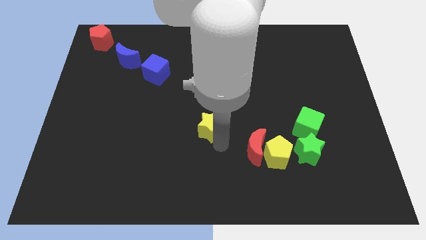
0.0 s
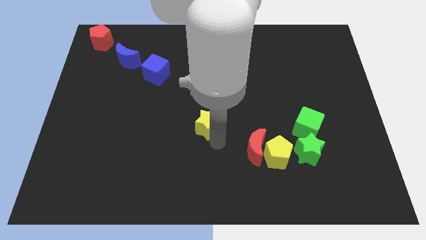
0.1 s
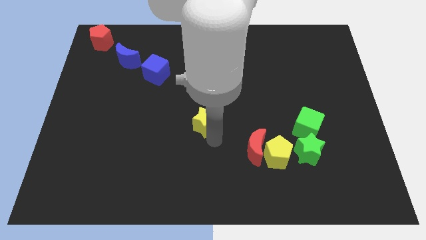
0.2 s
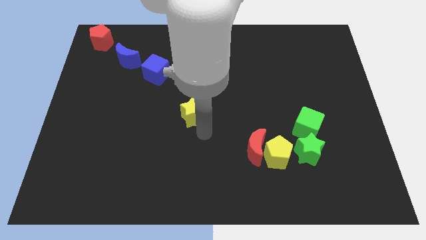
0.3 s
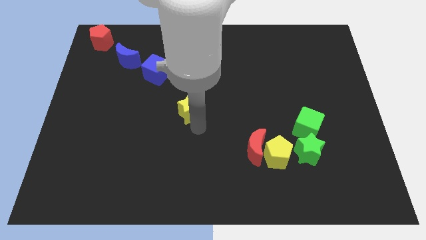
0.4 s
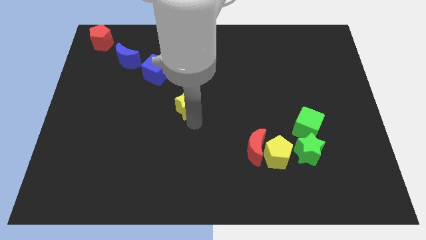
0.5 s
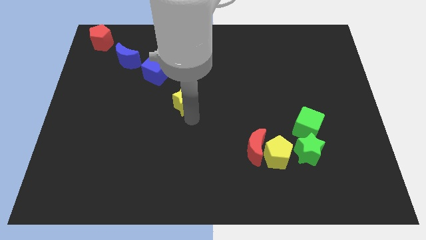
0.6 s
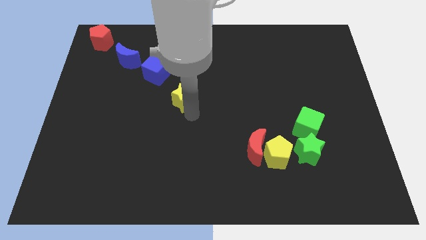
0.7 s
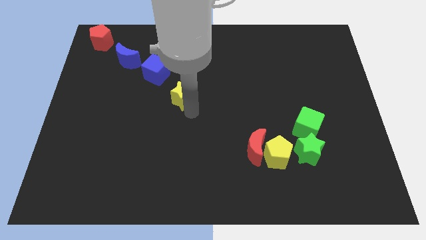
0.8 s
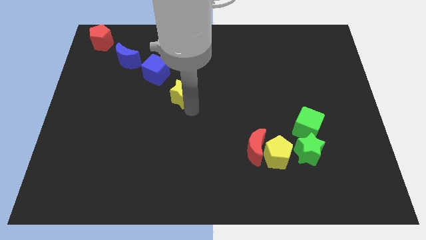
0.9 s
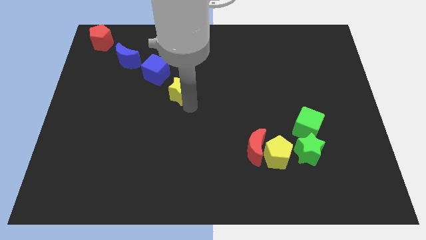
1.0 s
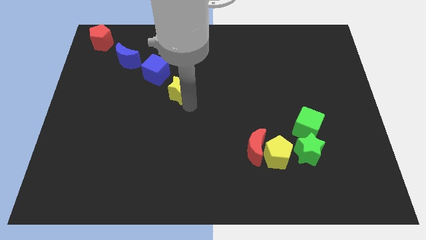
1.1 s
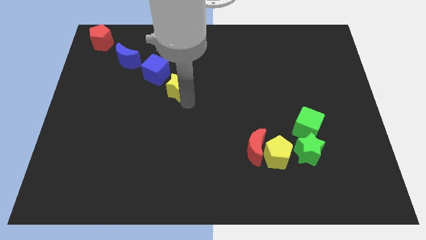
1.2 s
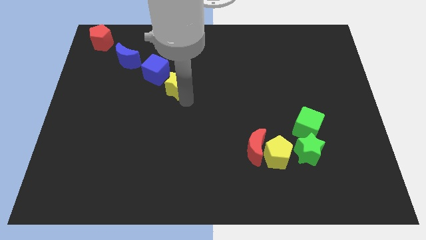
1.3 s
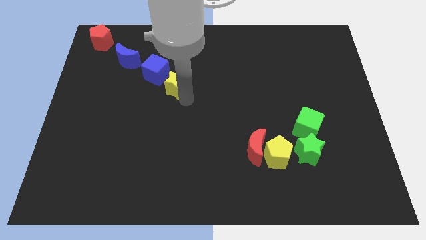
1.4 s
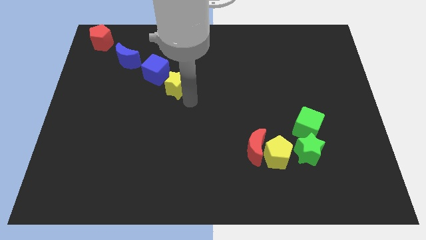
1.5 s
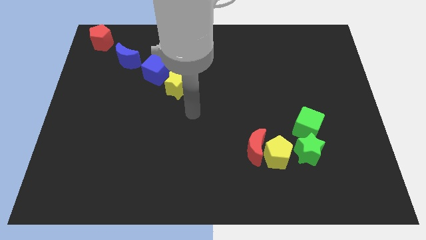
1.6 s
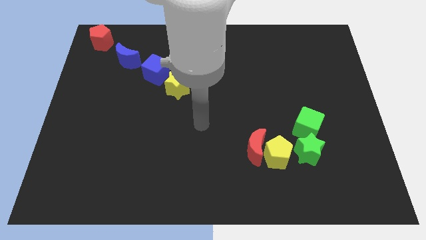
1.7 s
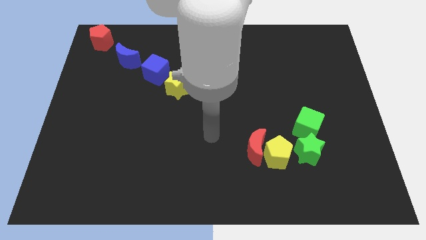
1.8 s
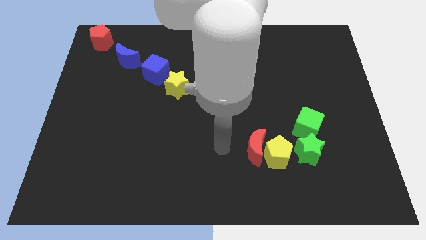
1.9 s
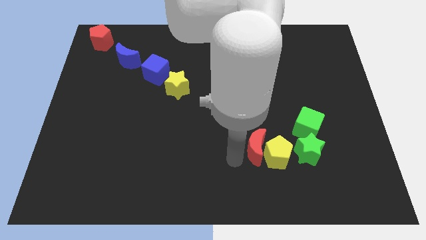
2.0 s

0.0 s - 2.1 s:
place the yellow star diagonally to the blue cube

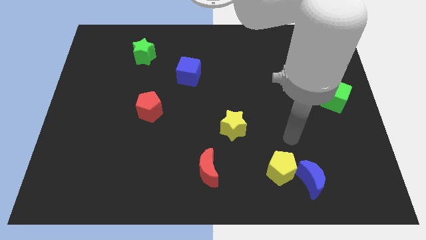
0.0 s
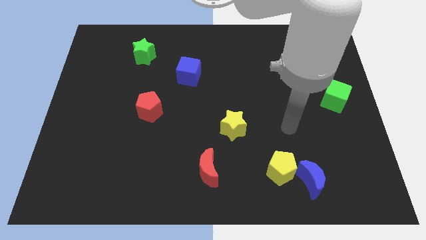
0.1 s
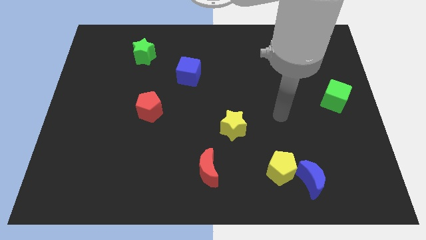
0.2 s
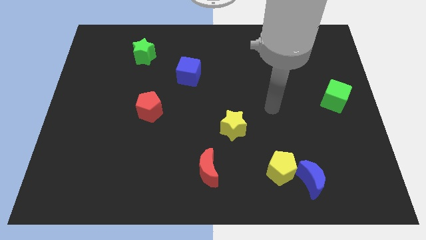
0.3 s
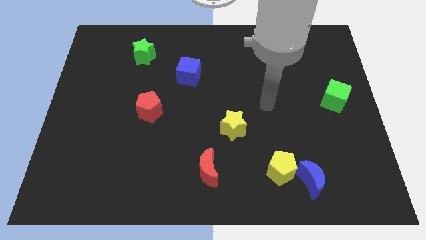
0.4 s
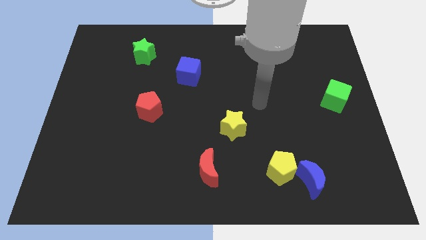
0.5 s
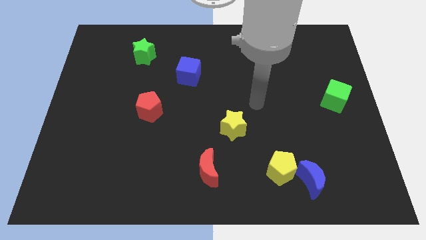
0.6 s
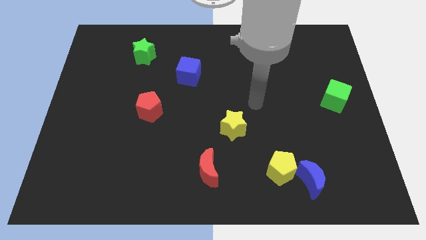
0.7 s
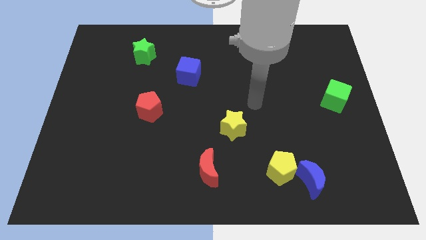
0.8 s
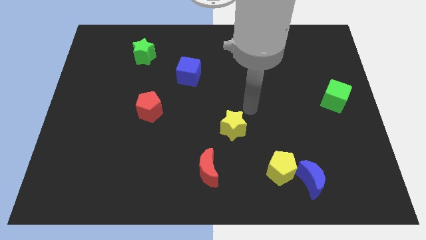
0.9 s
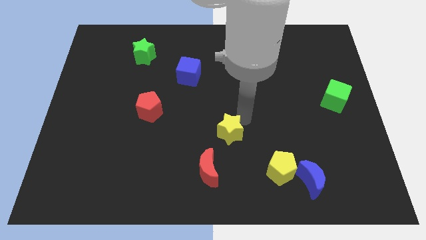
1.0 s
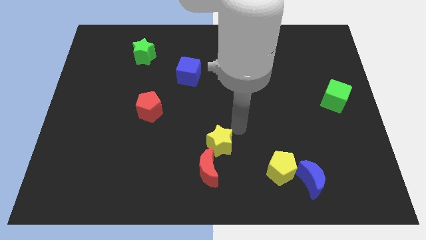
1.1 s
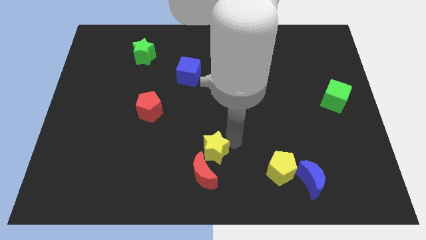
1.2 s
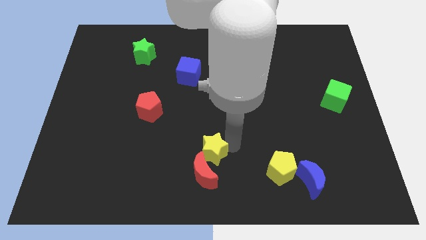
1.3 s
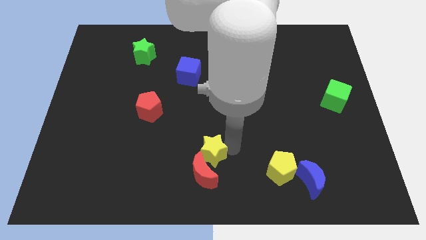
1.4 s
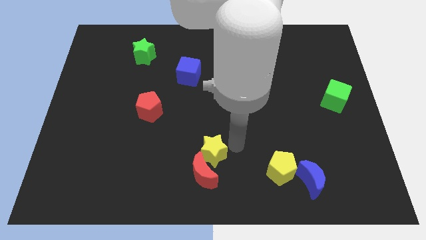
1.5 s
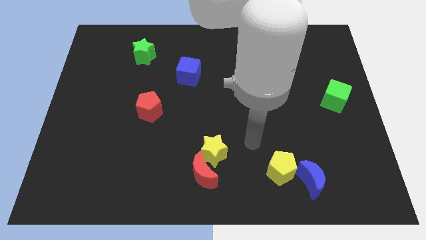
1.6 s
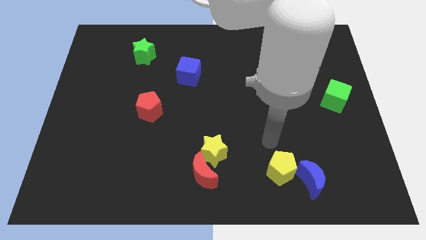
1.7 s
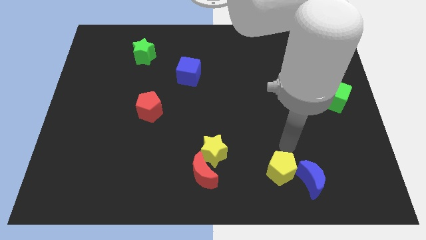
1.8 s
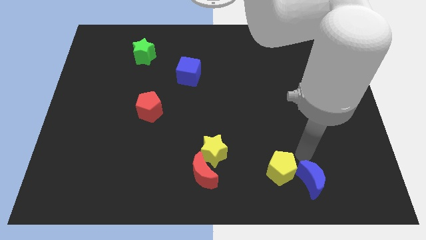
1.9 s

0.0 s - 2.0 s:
move the yellow star to the right of the red crescent

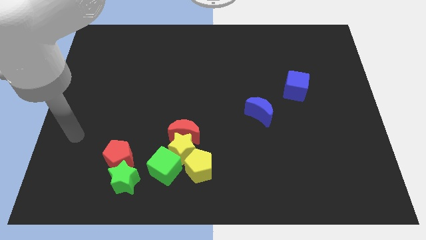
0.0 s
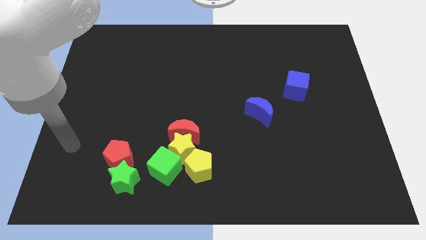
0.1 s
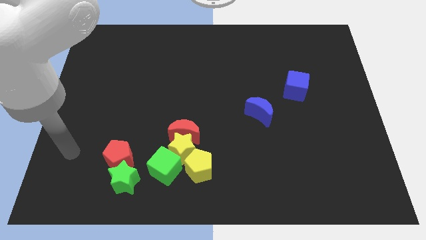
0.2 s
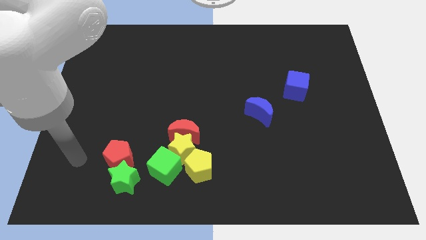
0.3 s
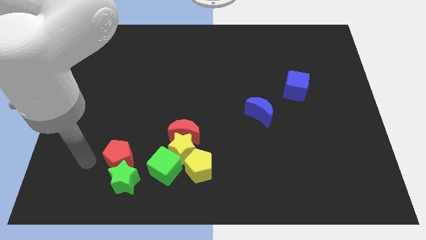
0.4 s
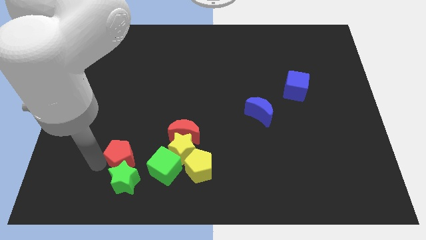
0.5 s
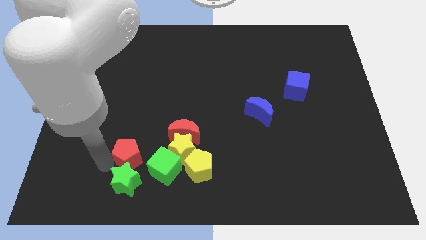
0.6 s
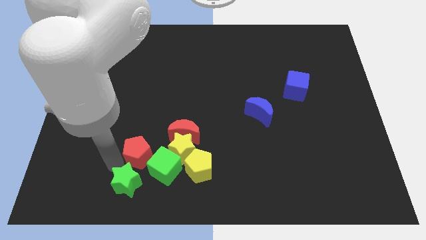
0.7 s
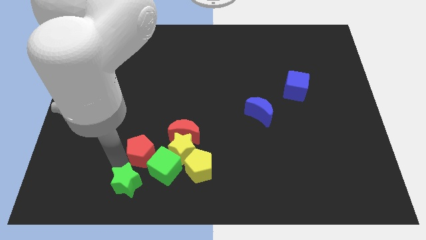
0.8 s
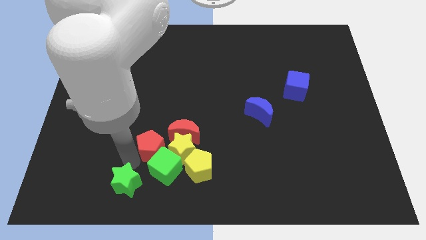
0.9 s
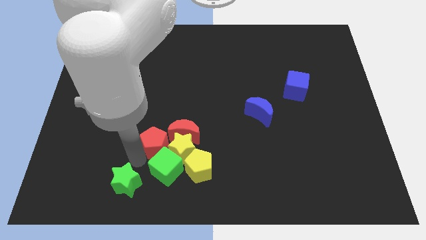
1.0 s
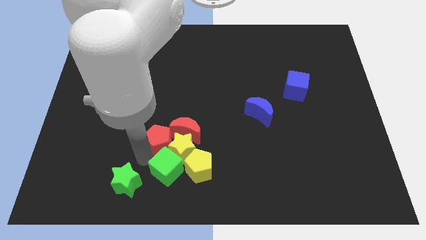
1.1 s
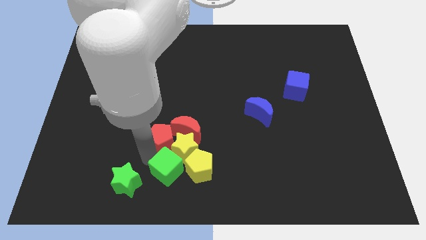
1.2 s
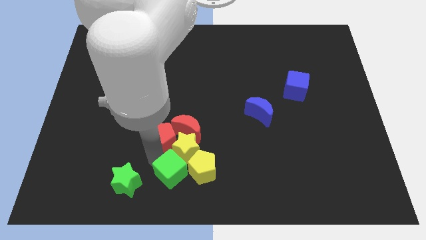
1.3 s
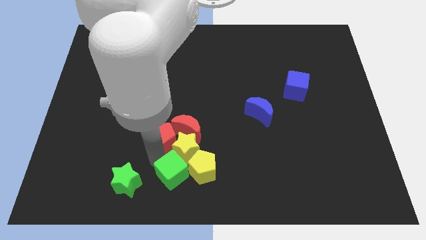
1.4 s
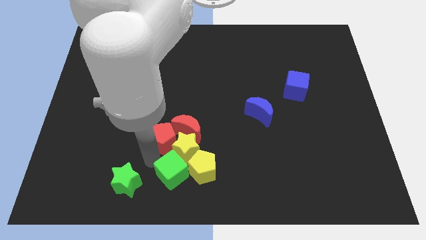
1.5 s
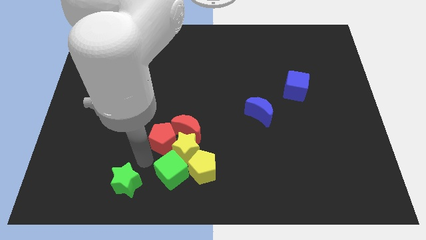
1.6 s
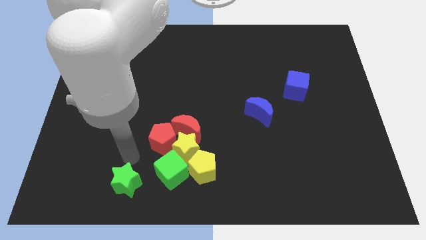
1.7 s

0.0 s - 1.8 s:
slide the red pentagon into the red crescent

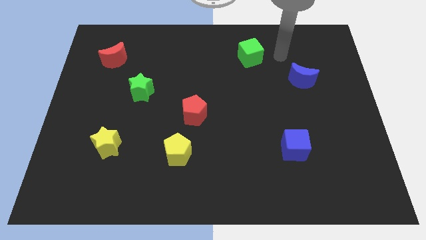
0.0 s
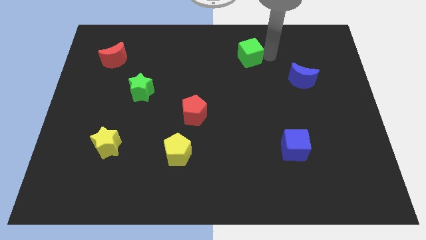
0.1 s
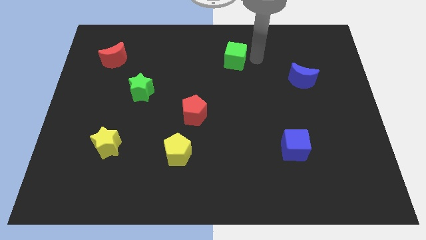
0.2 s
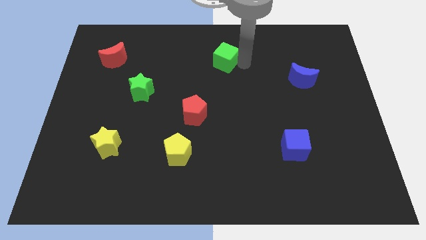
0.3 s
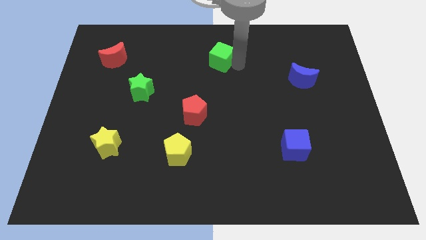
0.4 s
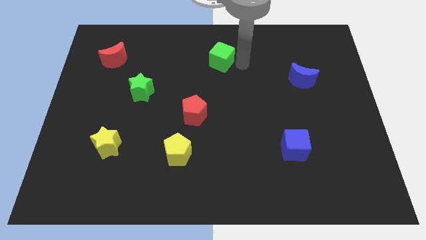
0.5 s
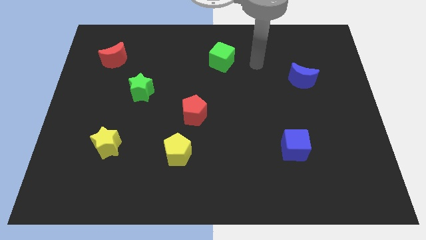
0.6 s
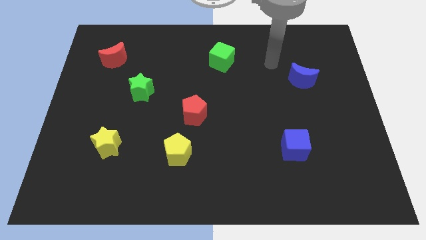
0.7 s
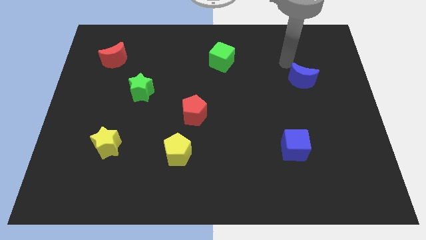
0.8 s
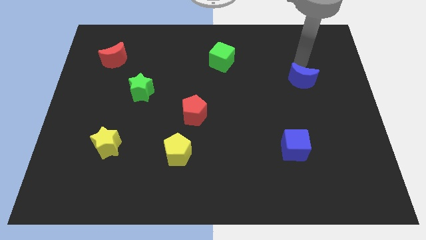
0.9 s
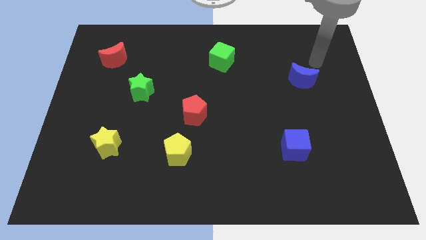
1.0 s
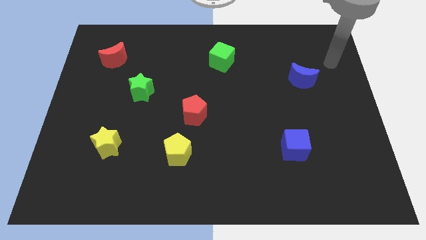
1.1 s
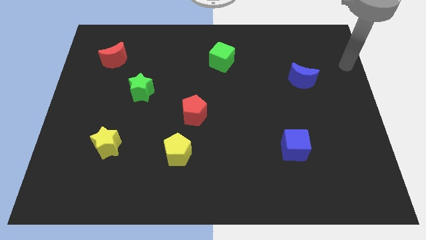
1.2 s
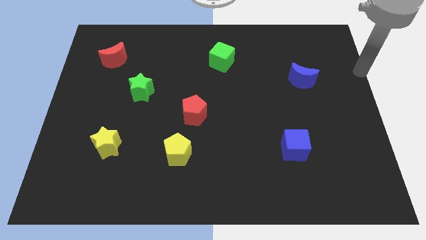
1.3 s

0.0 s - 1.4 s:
push the green cube parallel to the left of the blue crescent

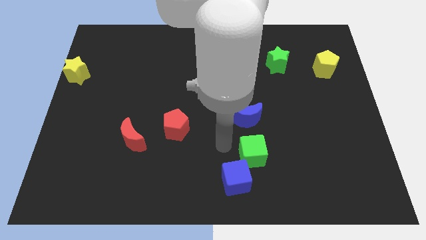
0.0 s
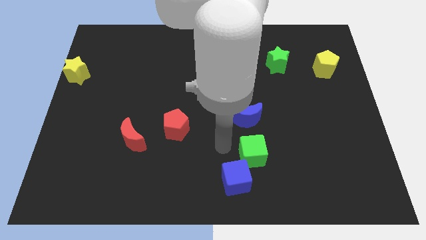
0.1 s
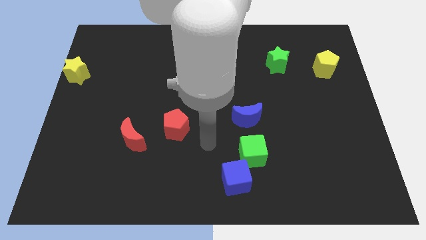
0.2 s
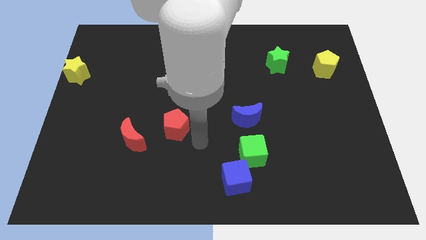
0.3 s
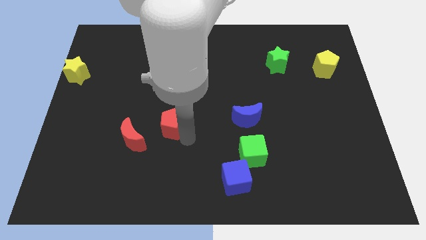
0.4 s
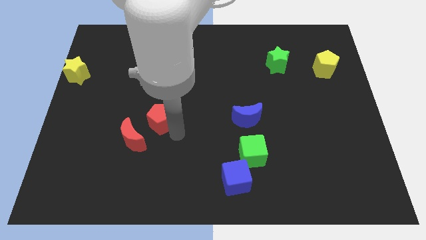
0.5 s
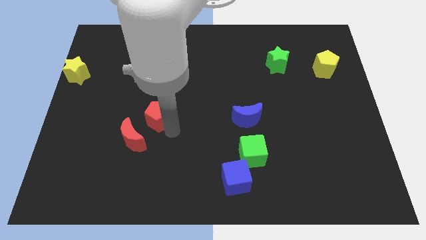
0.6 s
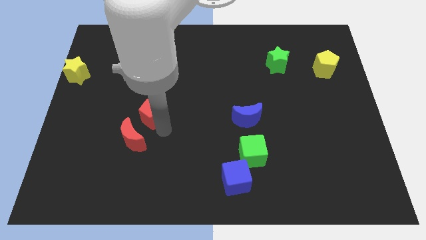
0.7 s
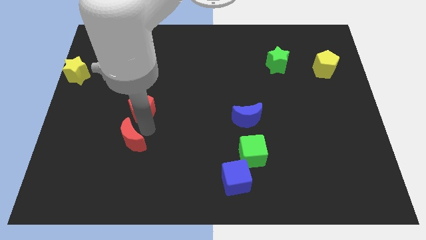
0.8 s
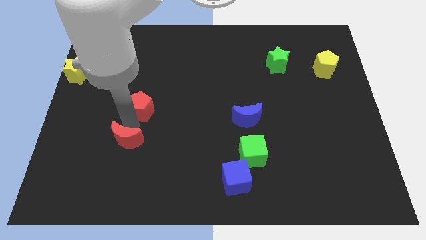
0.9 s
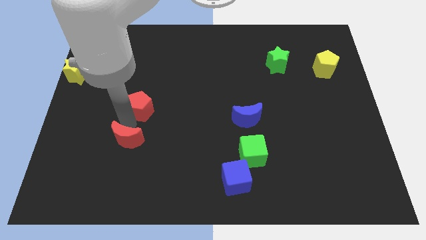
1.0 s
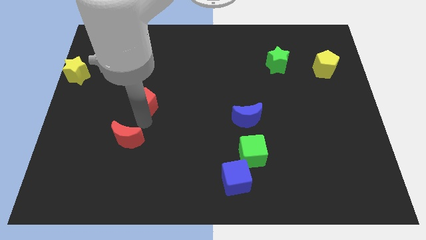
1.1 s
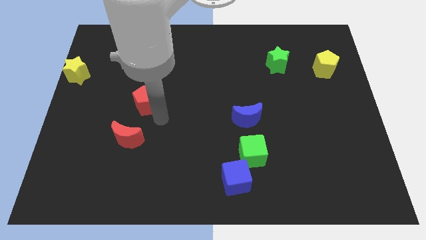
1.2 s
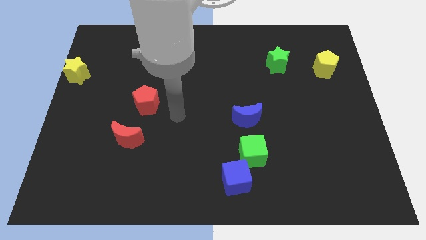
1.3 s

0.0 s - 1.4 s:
move the red pentagon slightly to the top left of the board

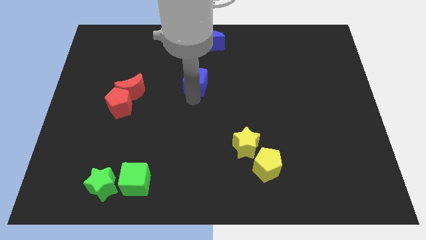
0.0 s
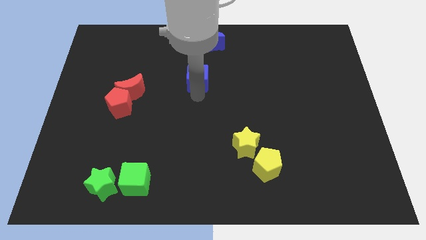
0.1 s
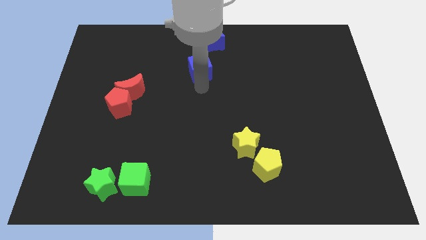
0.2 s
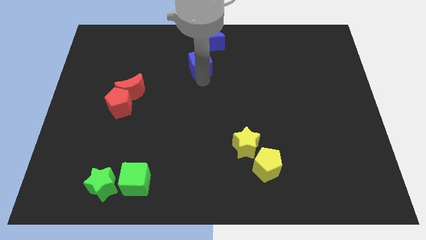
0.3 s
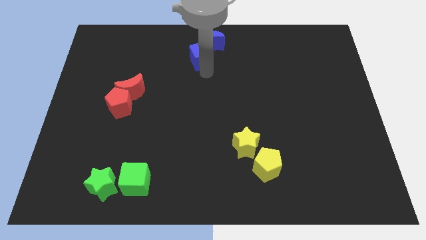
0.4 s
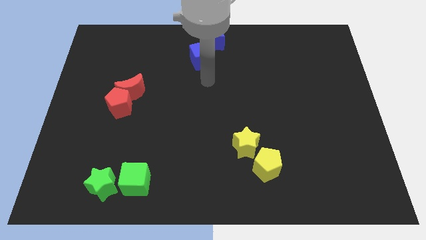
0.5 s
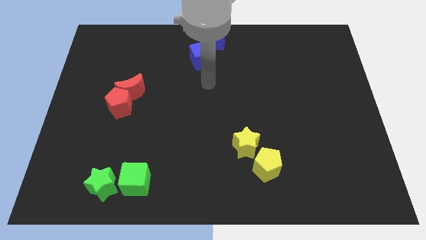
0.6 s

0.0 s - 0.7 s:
place the blue cube to the bottom left of the blue crescent
